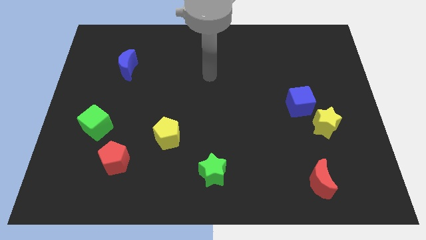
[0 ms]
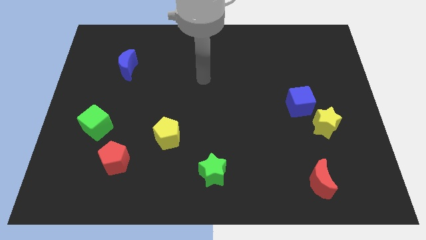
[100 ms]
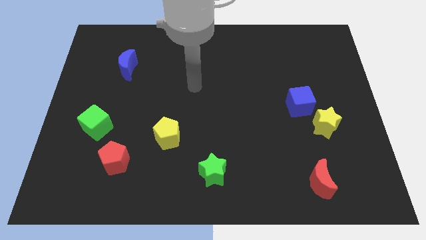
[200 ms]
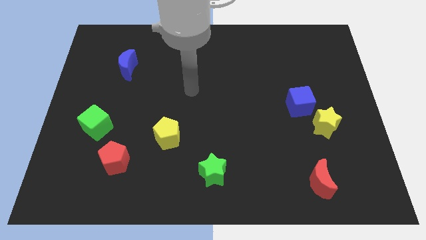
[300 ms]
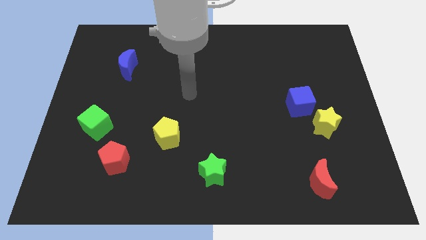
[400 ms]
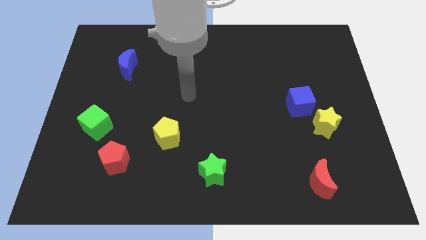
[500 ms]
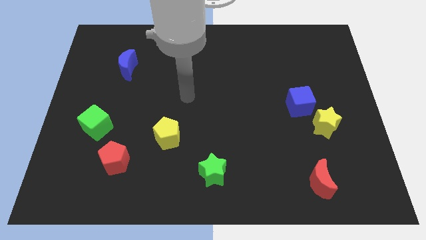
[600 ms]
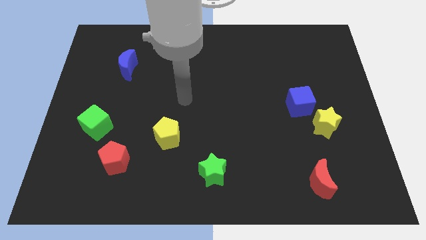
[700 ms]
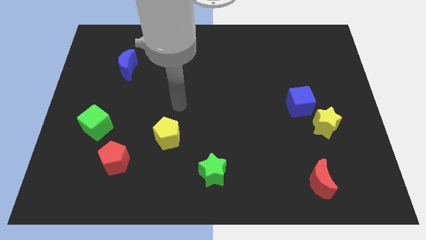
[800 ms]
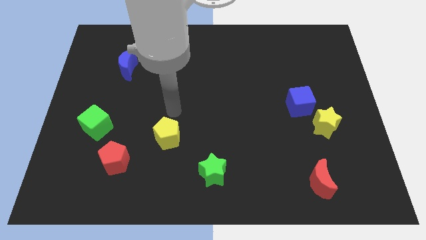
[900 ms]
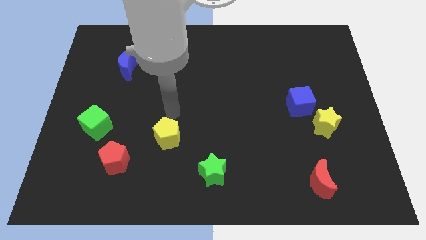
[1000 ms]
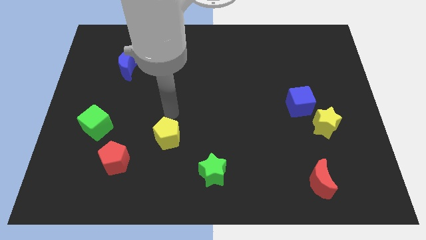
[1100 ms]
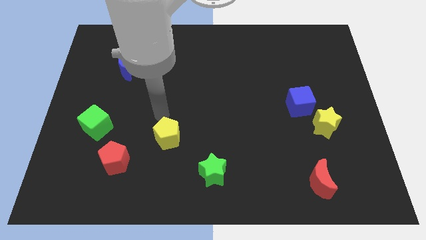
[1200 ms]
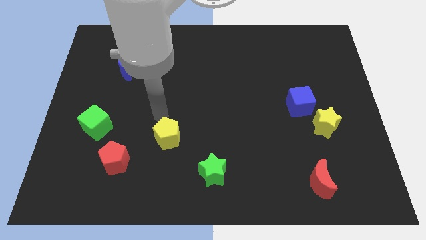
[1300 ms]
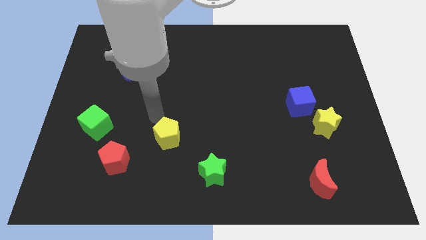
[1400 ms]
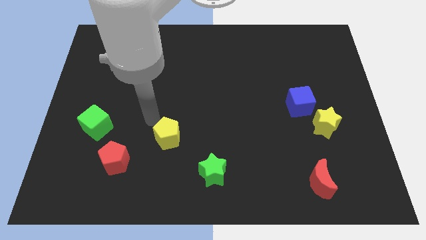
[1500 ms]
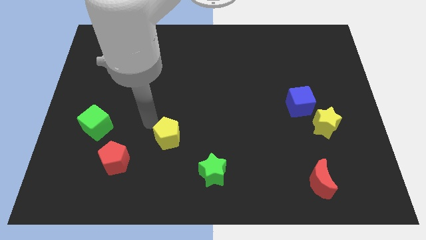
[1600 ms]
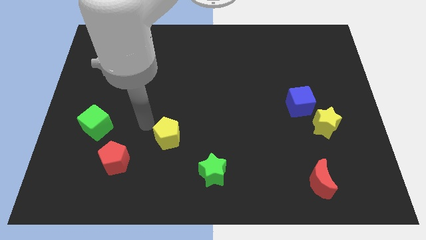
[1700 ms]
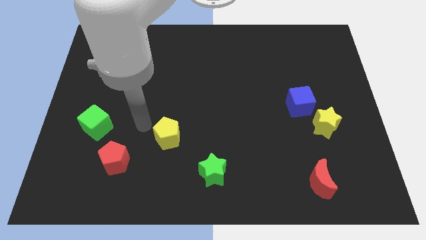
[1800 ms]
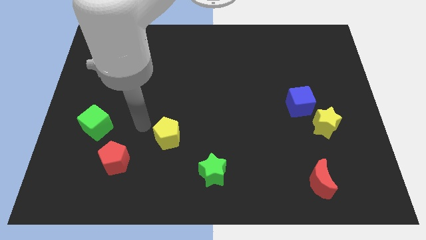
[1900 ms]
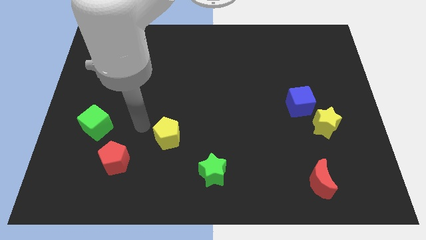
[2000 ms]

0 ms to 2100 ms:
move the arm towards the yellow pentagon

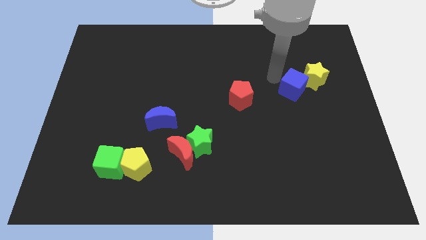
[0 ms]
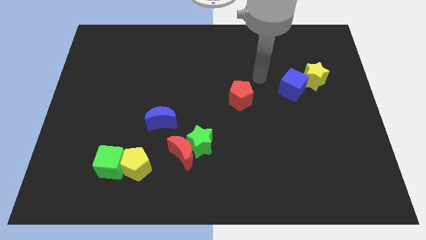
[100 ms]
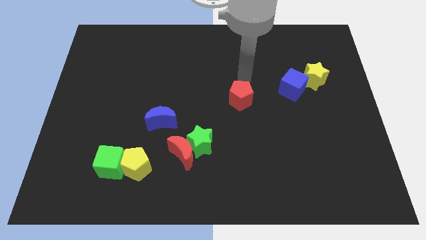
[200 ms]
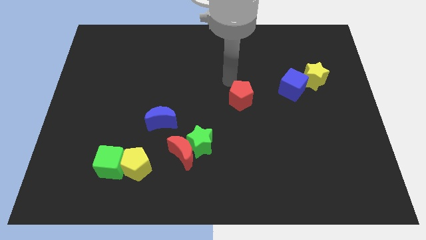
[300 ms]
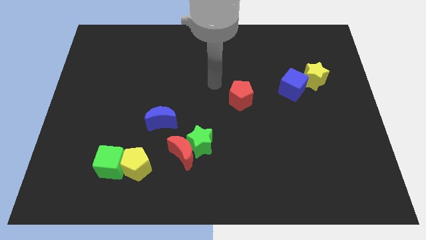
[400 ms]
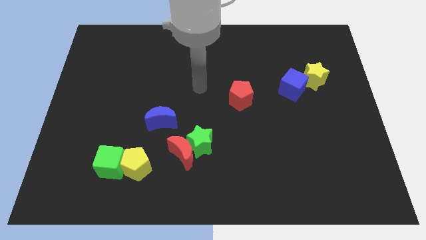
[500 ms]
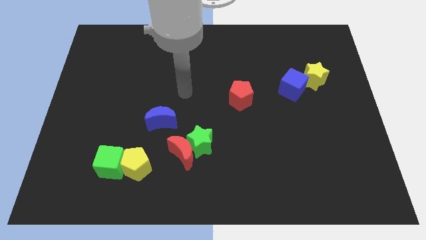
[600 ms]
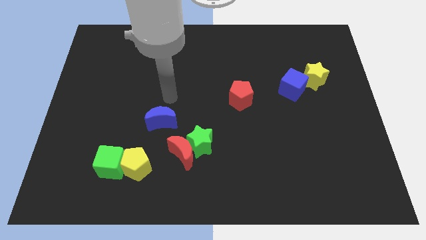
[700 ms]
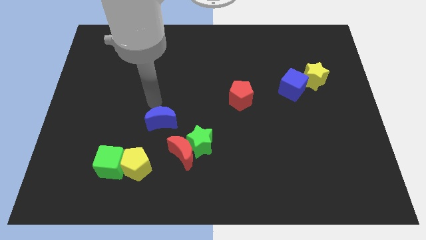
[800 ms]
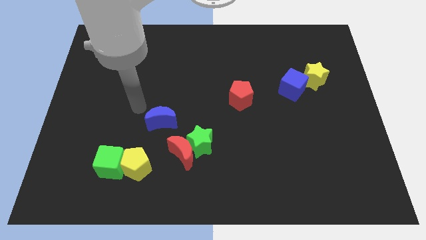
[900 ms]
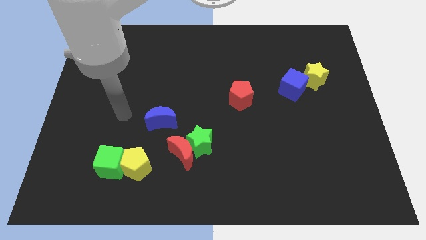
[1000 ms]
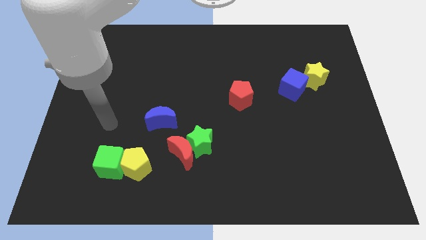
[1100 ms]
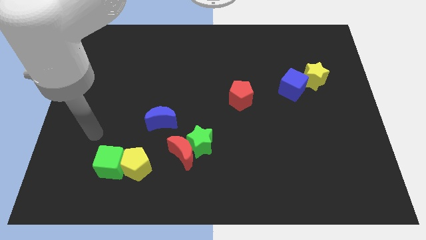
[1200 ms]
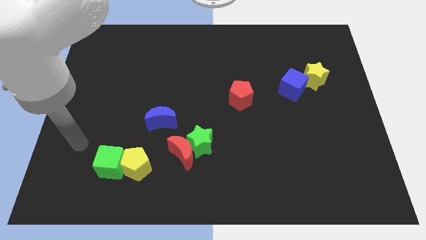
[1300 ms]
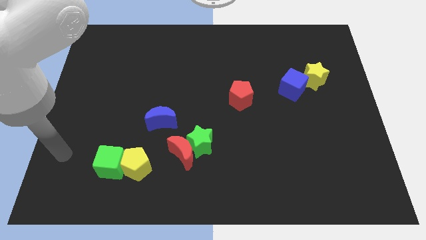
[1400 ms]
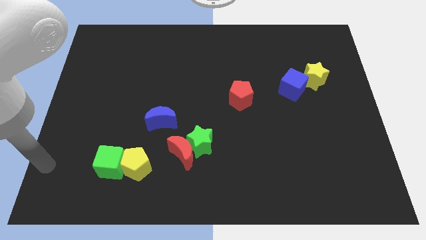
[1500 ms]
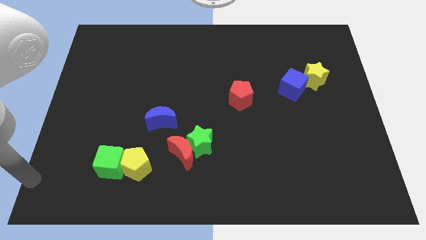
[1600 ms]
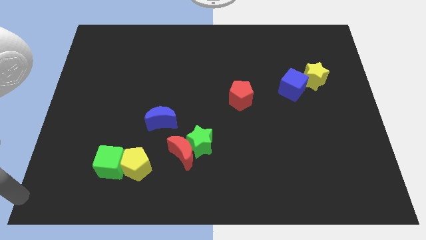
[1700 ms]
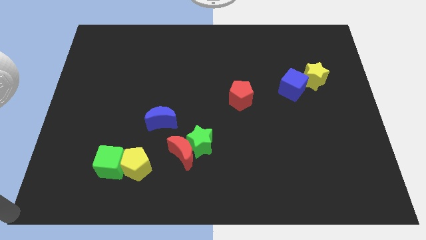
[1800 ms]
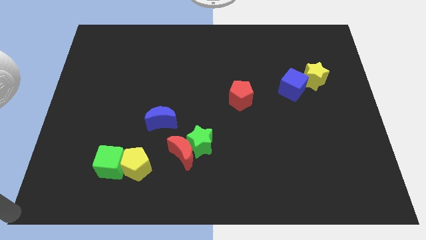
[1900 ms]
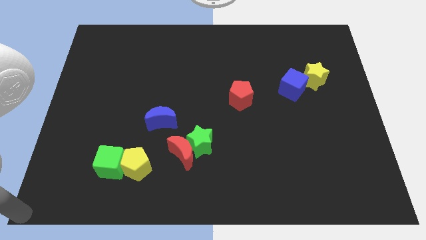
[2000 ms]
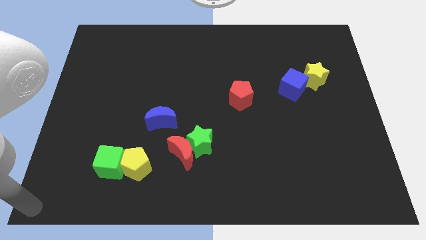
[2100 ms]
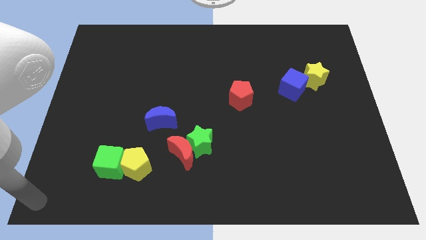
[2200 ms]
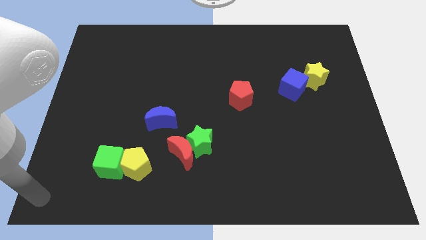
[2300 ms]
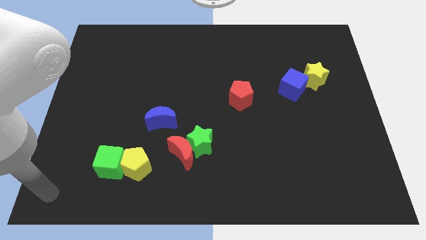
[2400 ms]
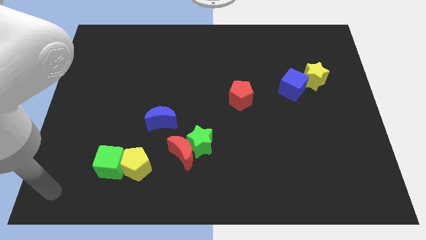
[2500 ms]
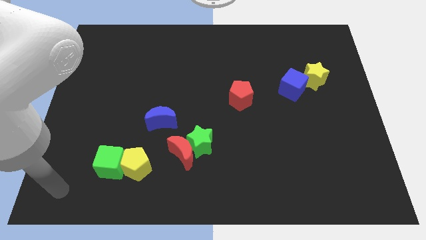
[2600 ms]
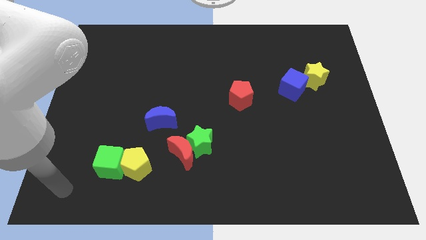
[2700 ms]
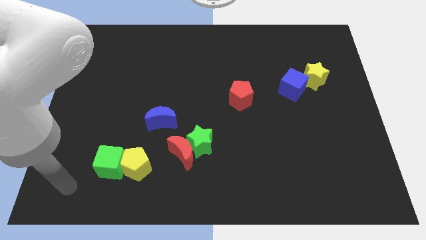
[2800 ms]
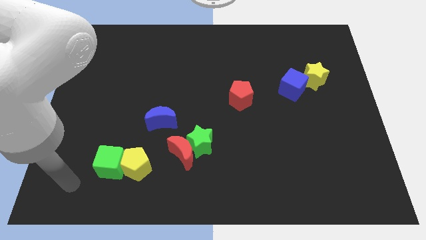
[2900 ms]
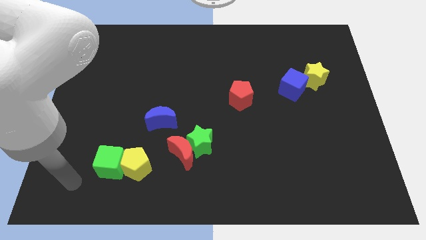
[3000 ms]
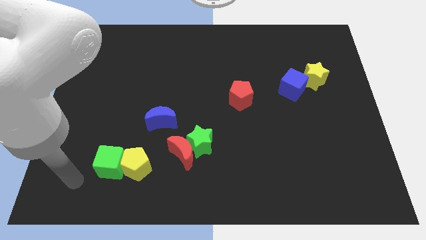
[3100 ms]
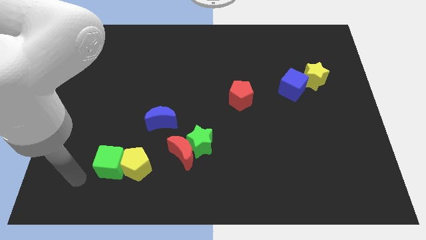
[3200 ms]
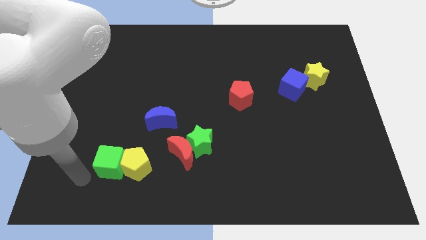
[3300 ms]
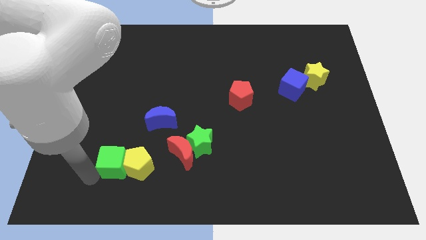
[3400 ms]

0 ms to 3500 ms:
point your arm near the green cube

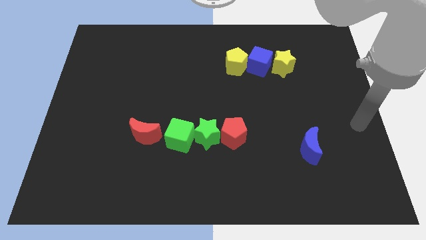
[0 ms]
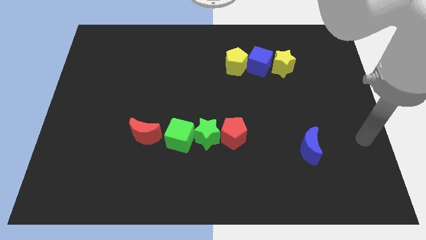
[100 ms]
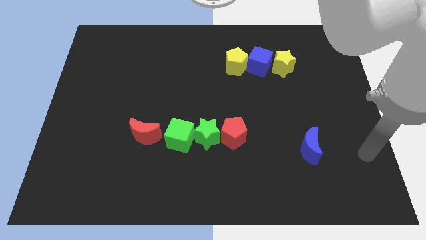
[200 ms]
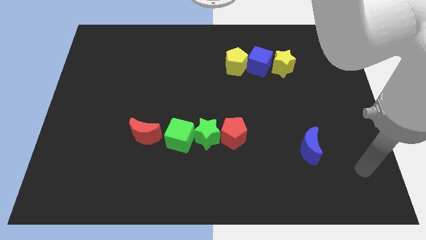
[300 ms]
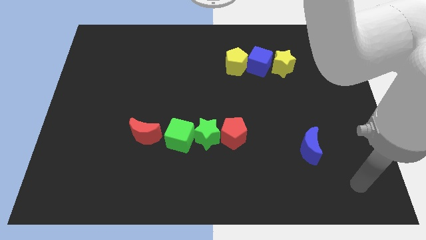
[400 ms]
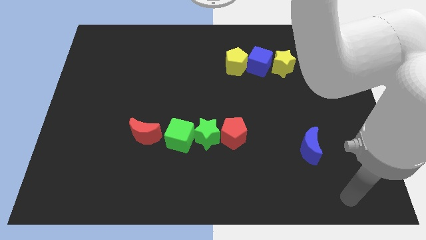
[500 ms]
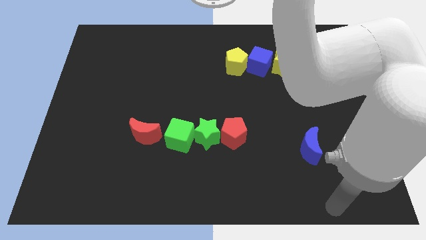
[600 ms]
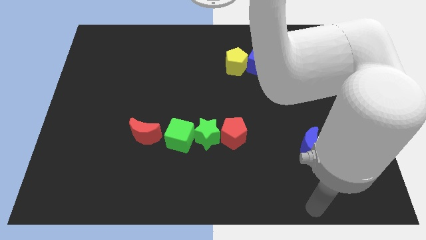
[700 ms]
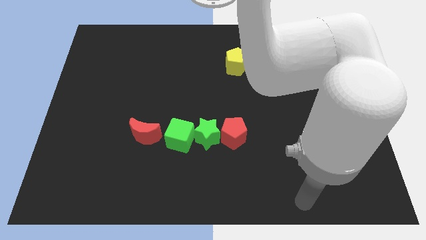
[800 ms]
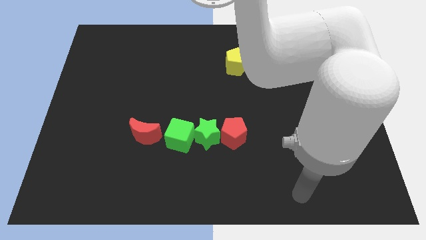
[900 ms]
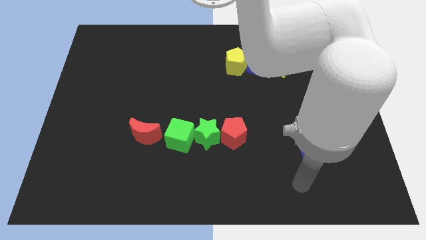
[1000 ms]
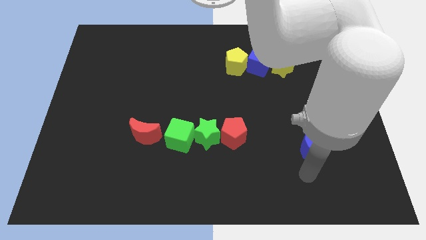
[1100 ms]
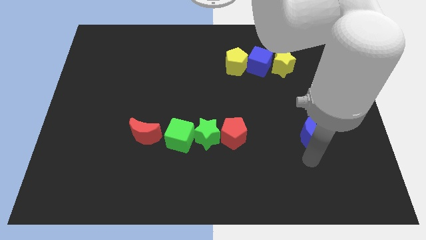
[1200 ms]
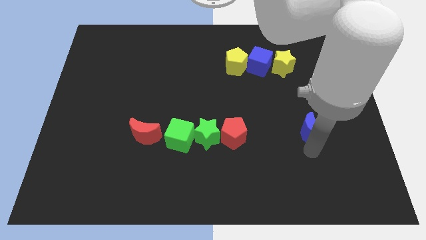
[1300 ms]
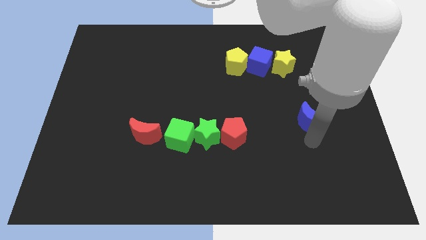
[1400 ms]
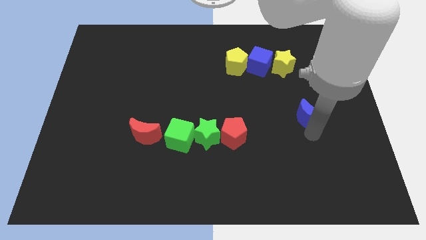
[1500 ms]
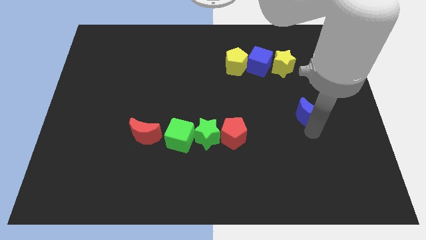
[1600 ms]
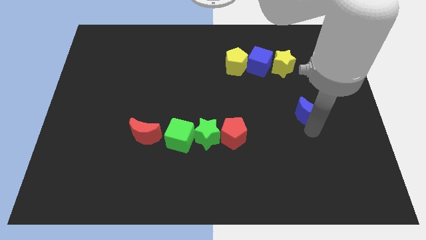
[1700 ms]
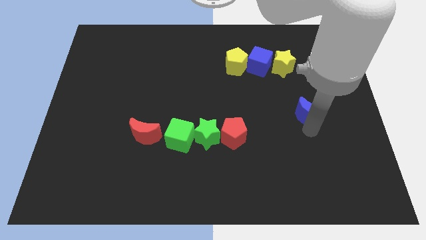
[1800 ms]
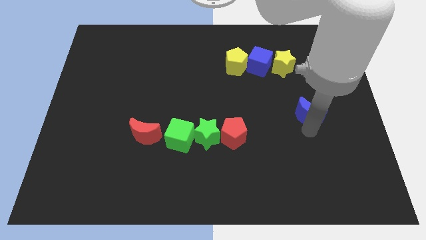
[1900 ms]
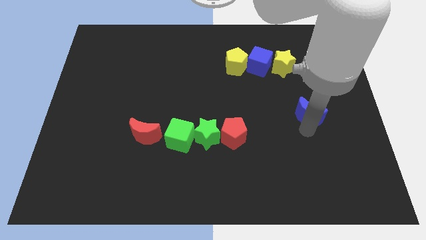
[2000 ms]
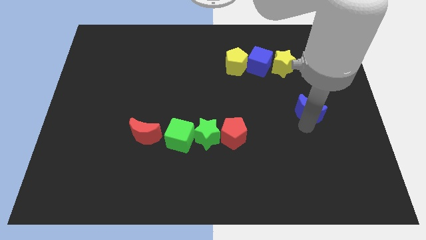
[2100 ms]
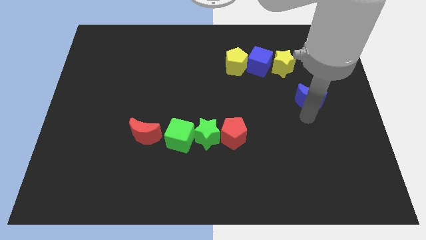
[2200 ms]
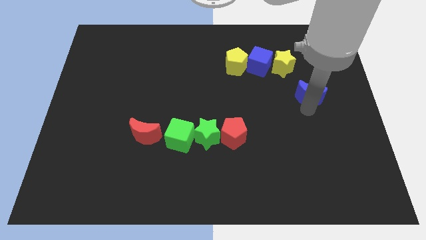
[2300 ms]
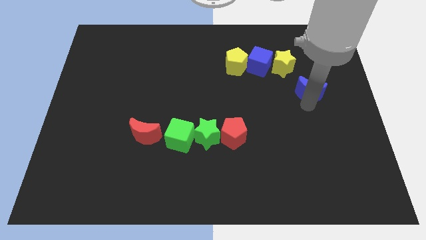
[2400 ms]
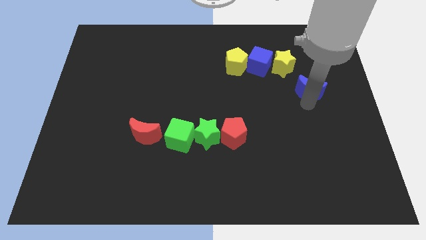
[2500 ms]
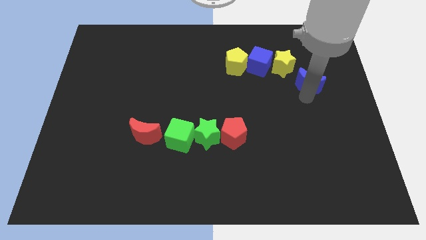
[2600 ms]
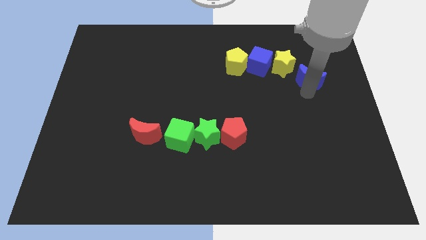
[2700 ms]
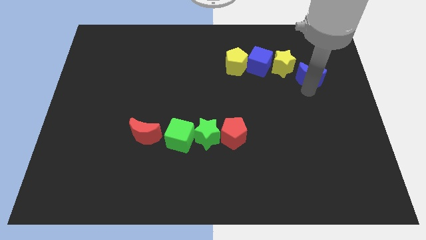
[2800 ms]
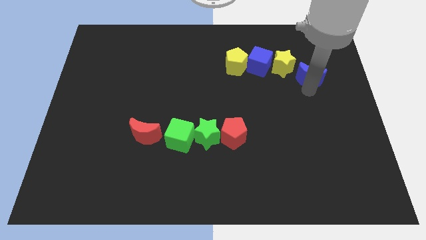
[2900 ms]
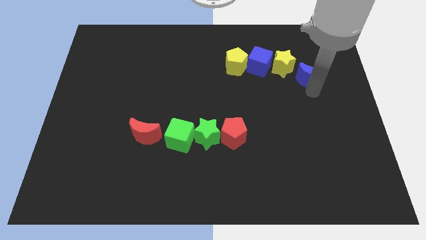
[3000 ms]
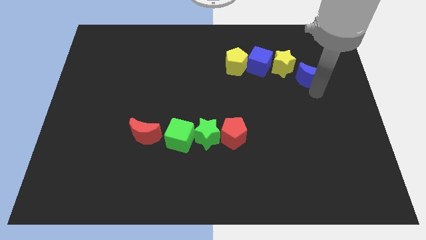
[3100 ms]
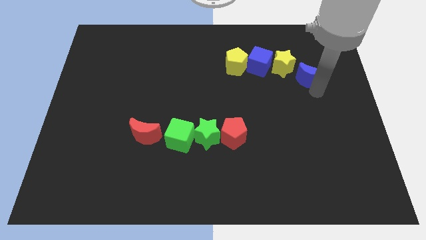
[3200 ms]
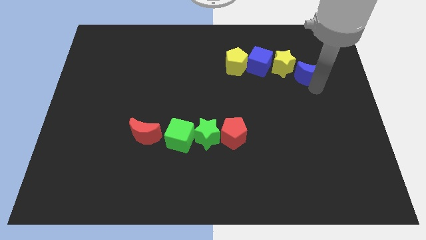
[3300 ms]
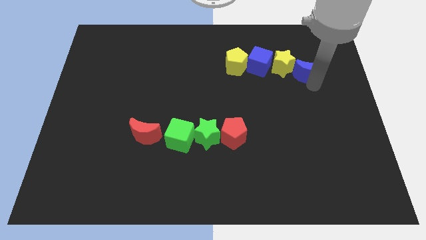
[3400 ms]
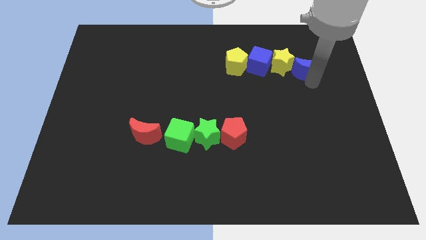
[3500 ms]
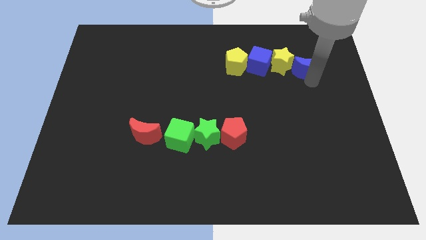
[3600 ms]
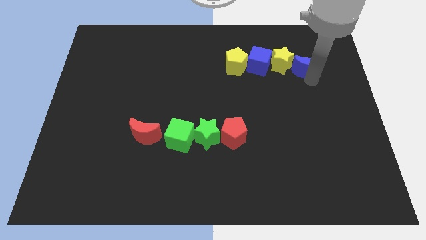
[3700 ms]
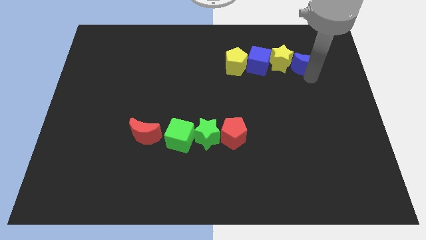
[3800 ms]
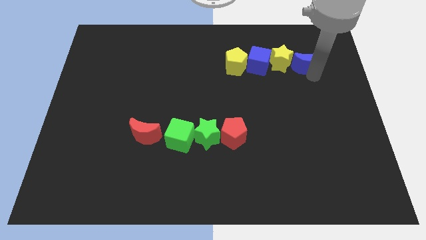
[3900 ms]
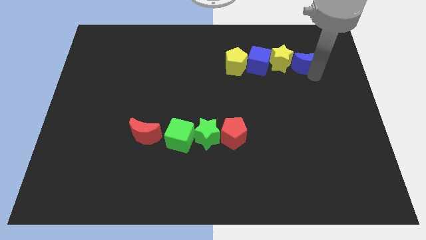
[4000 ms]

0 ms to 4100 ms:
move the blue crescent to the right of the yellow star
